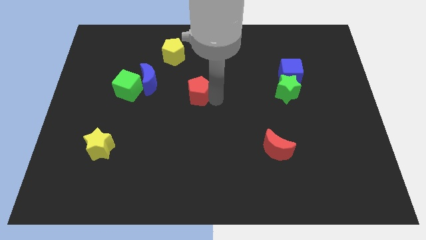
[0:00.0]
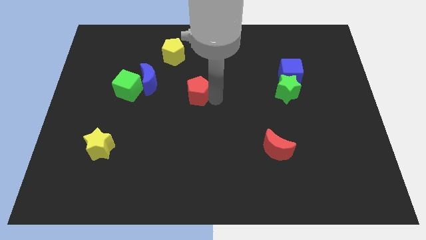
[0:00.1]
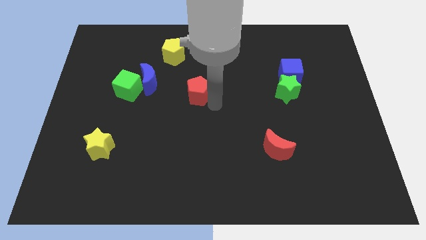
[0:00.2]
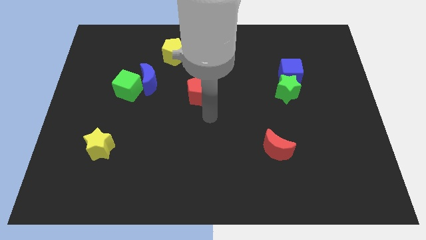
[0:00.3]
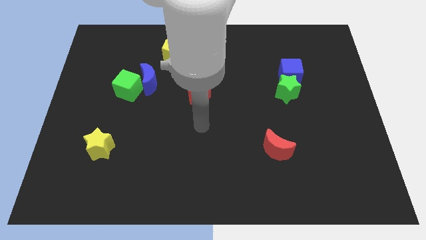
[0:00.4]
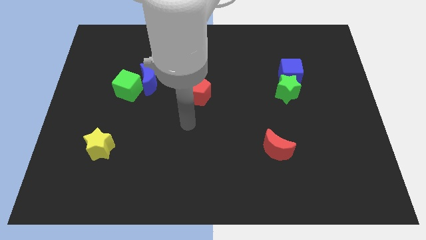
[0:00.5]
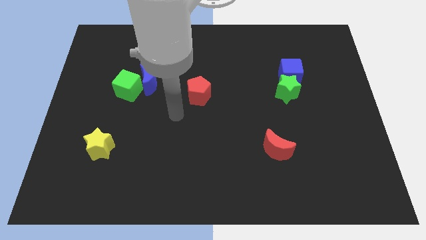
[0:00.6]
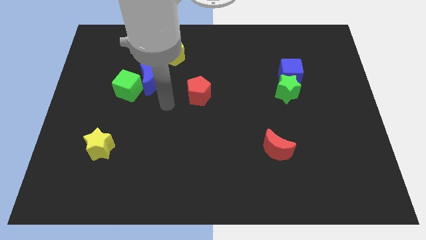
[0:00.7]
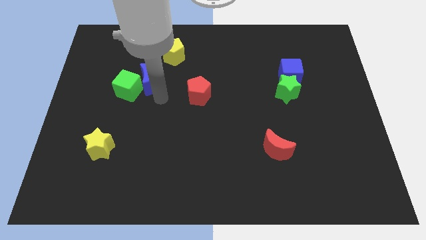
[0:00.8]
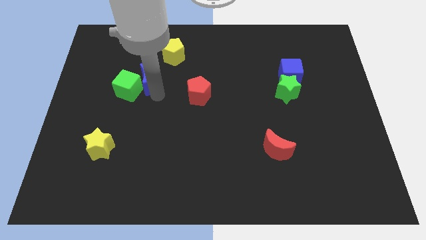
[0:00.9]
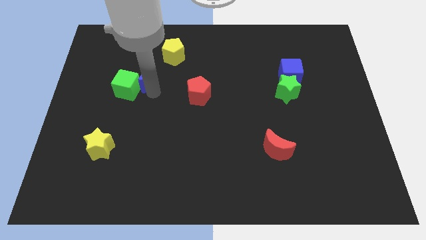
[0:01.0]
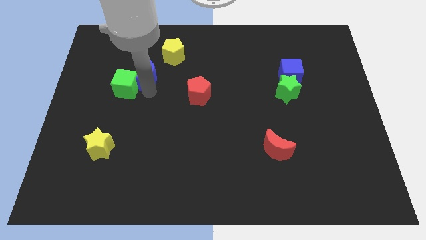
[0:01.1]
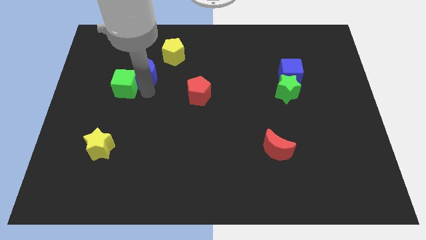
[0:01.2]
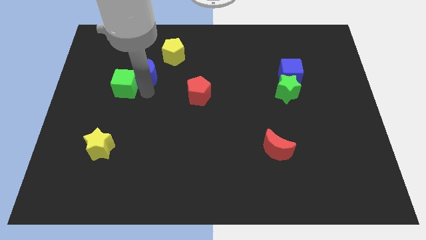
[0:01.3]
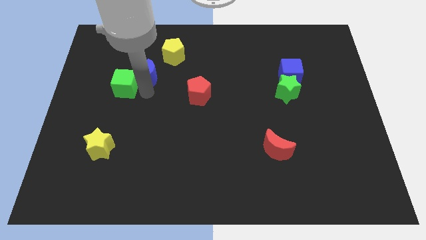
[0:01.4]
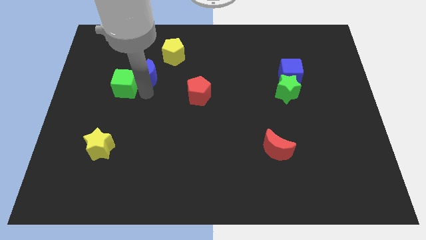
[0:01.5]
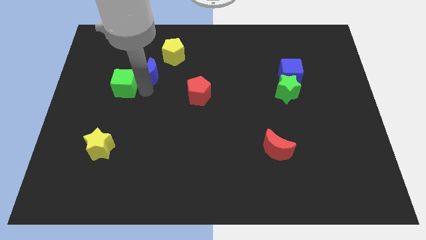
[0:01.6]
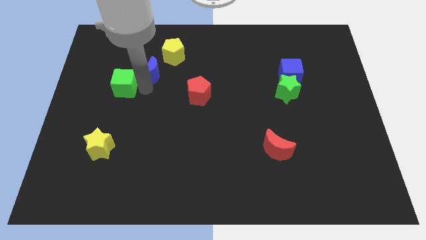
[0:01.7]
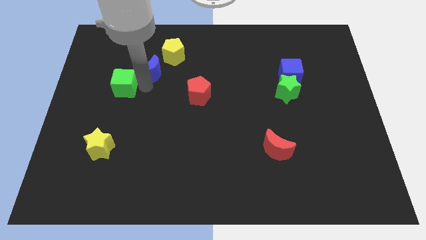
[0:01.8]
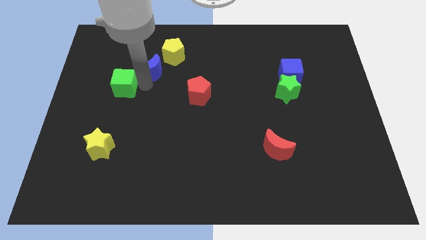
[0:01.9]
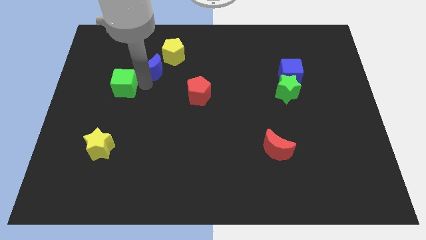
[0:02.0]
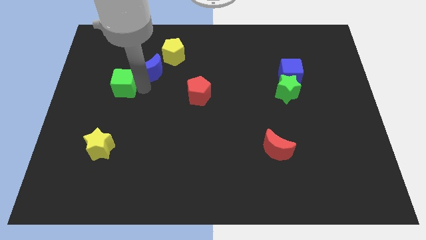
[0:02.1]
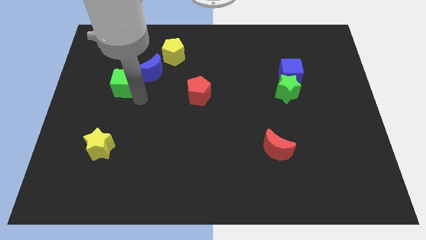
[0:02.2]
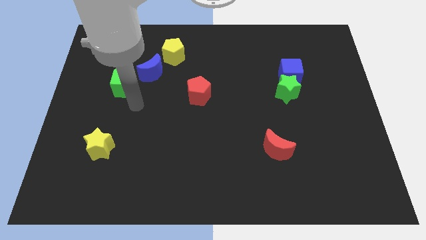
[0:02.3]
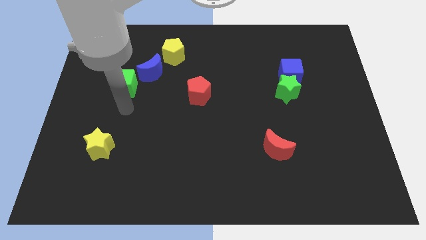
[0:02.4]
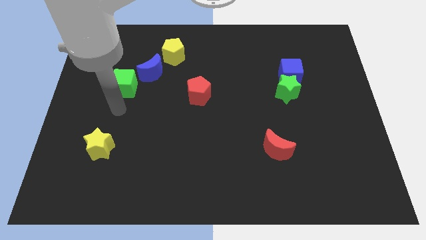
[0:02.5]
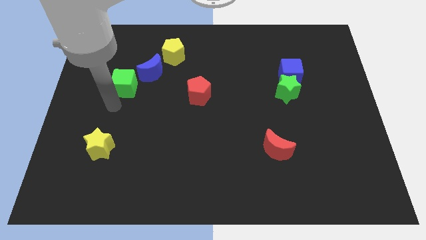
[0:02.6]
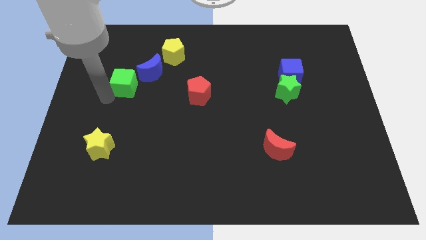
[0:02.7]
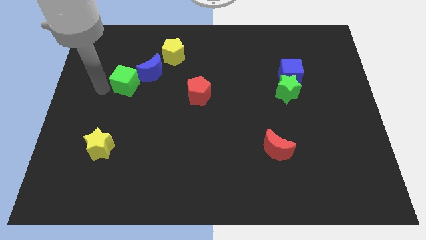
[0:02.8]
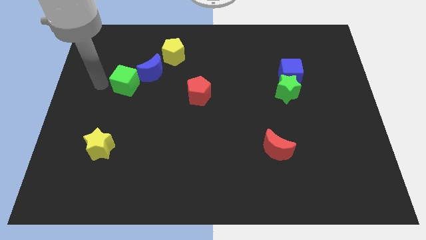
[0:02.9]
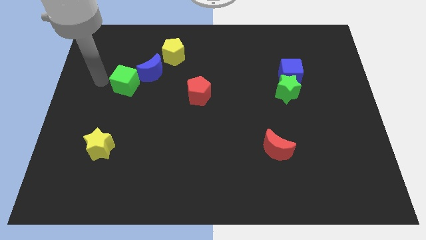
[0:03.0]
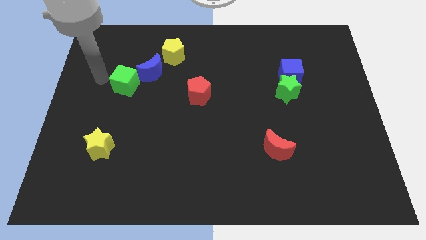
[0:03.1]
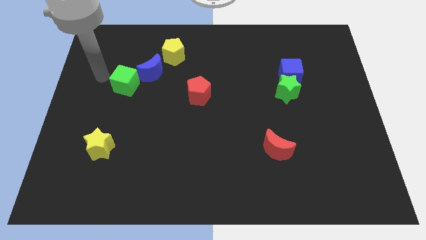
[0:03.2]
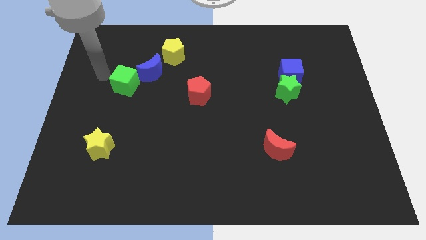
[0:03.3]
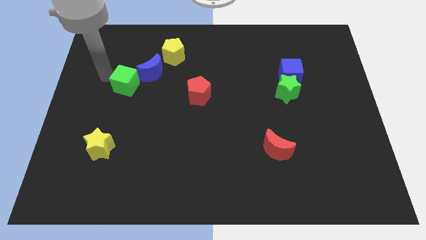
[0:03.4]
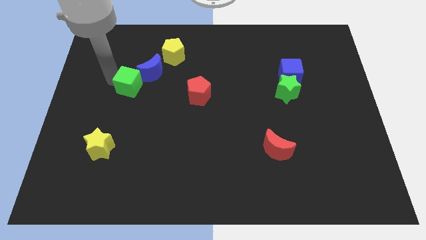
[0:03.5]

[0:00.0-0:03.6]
slide the blue moon and green cube diagonally on the bottom left side of the yellow pentagon

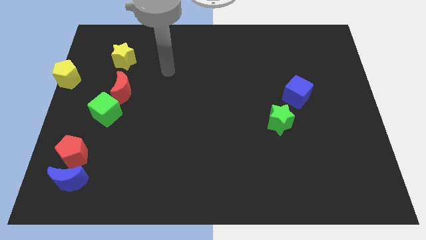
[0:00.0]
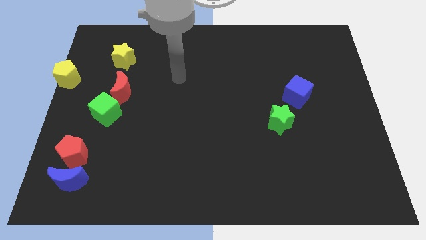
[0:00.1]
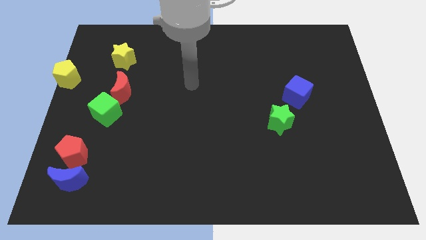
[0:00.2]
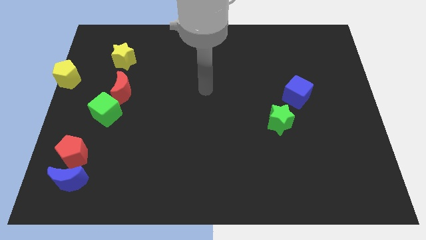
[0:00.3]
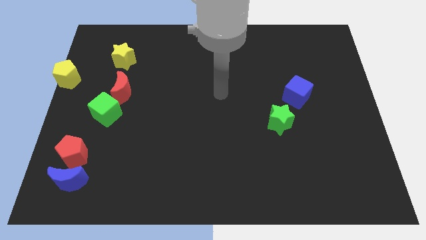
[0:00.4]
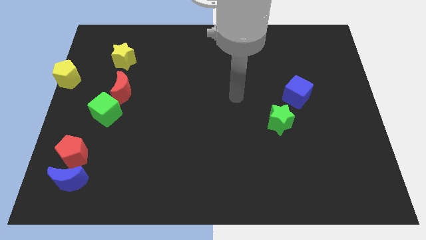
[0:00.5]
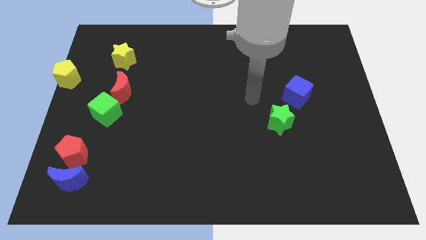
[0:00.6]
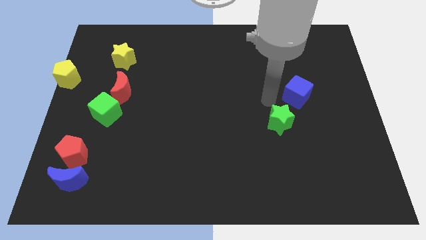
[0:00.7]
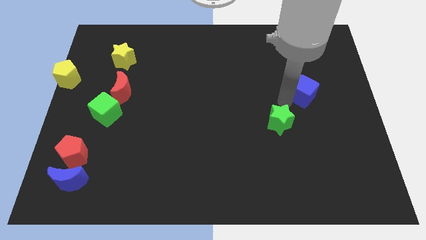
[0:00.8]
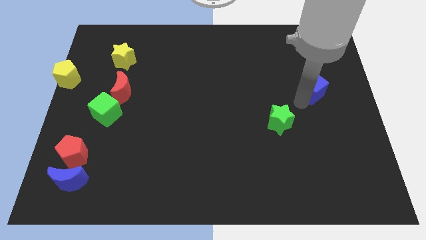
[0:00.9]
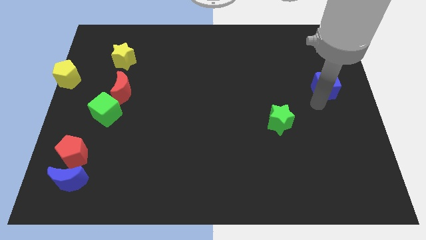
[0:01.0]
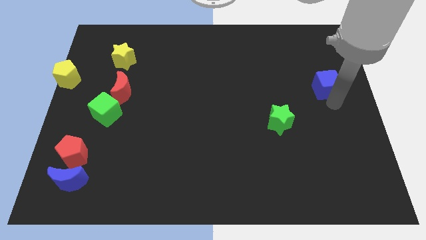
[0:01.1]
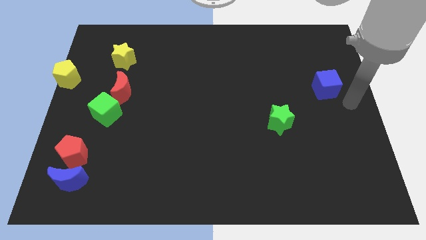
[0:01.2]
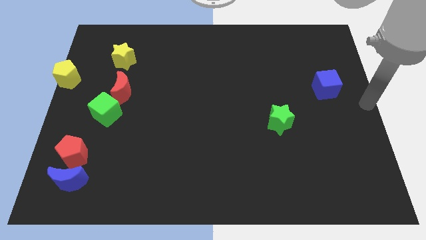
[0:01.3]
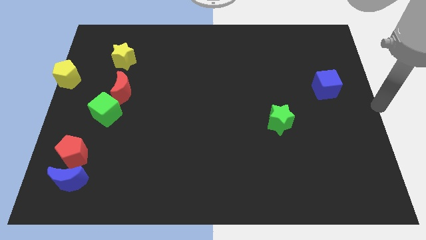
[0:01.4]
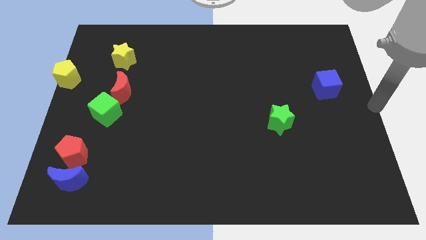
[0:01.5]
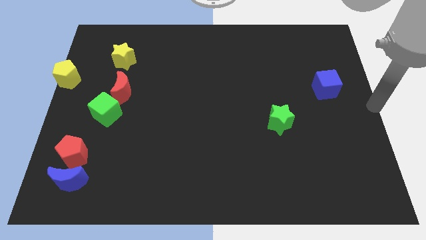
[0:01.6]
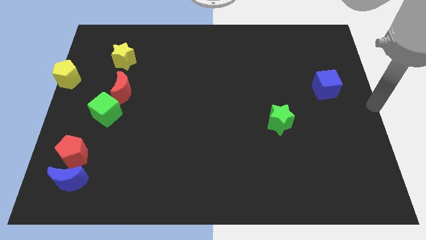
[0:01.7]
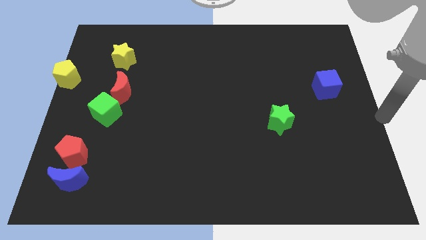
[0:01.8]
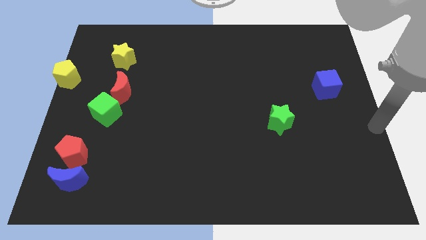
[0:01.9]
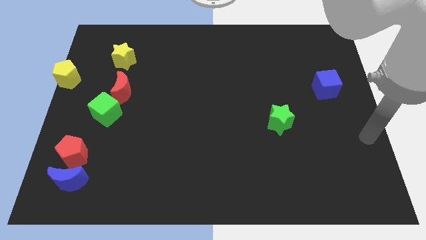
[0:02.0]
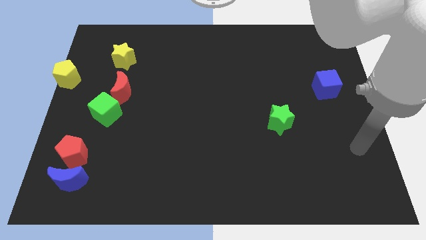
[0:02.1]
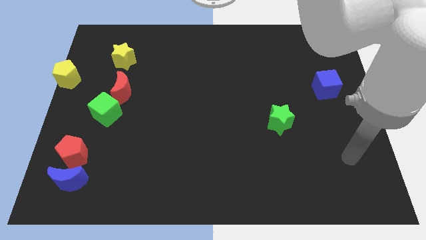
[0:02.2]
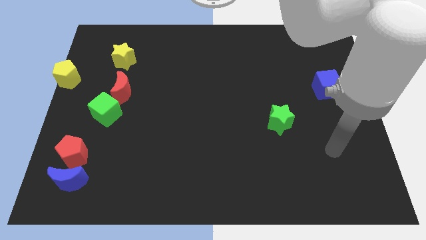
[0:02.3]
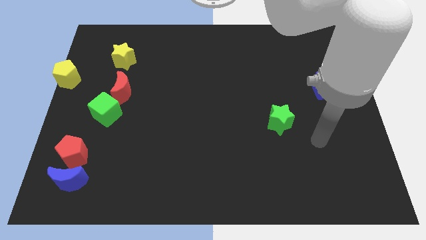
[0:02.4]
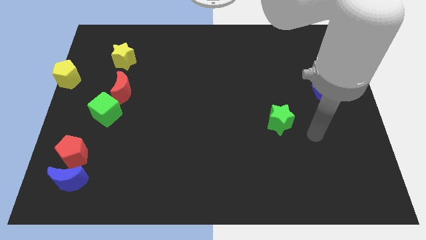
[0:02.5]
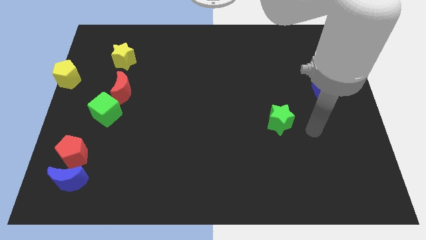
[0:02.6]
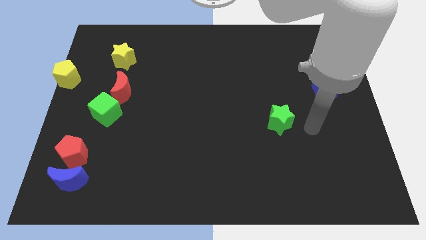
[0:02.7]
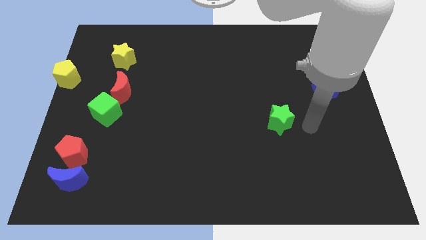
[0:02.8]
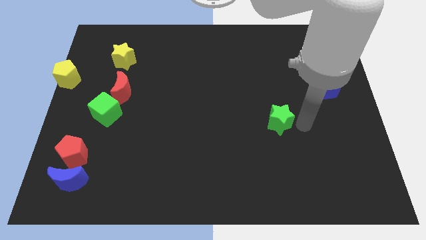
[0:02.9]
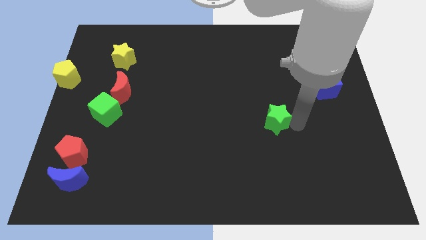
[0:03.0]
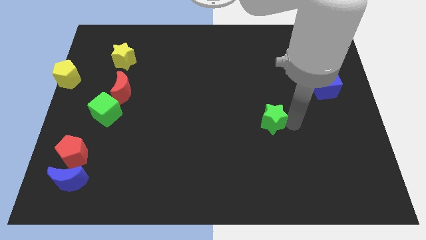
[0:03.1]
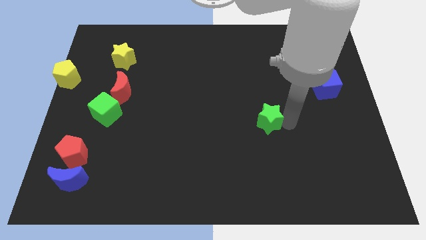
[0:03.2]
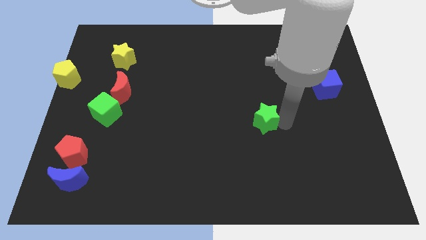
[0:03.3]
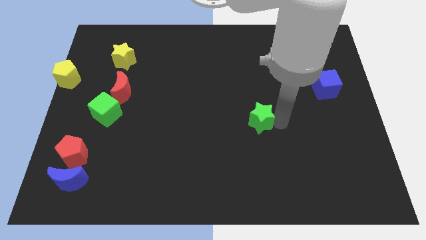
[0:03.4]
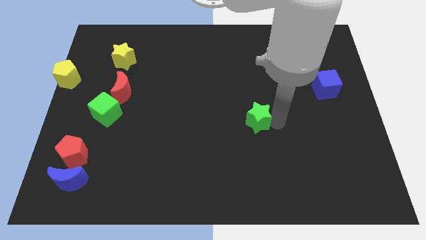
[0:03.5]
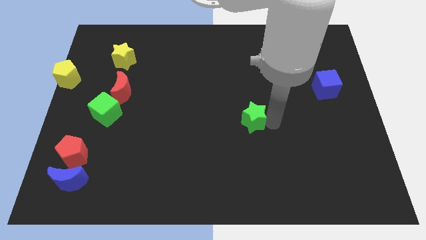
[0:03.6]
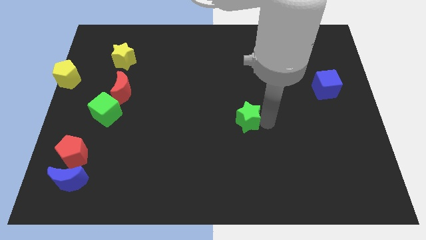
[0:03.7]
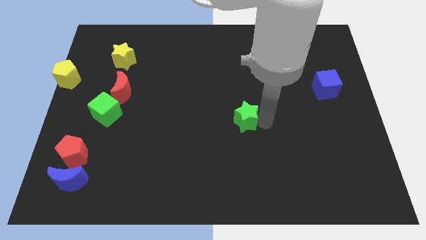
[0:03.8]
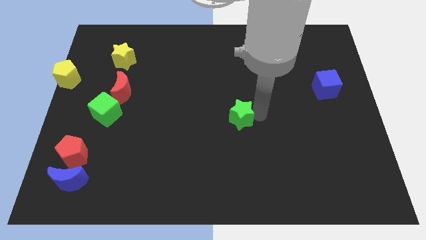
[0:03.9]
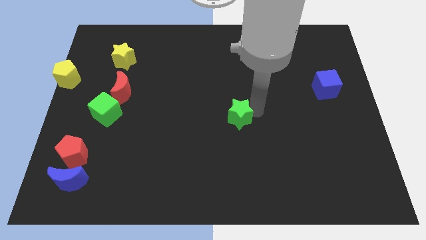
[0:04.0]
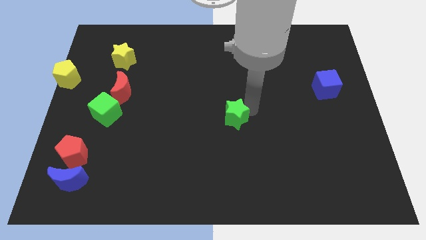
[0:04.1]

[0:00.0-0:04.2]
separate the green star from the blue cube

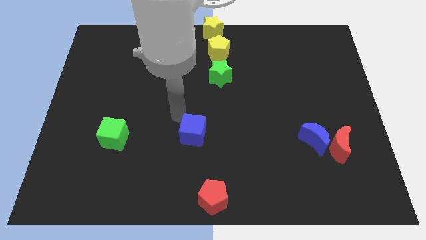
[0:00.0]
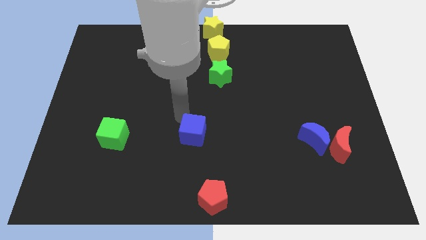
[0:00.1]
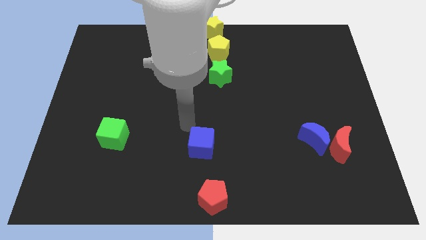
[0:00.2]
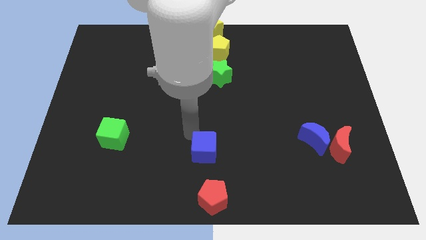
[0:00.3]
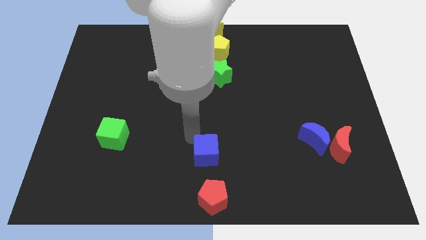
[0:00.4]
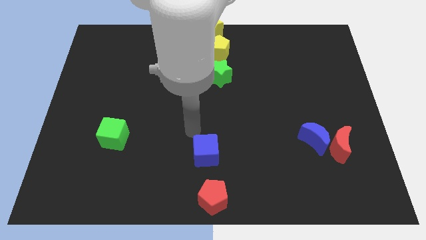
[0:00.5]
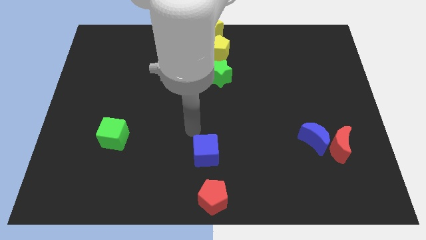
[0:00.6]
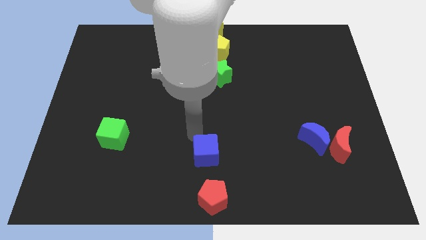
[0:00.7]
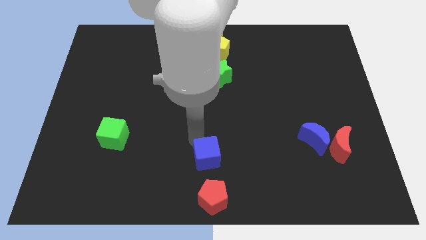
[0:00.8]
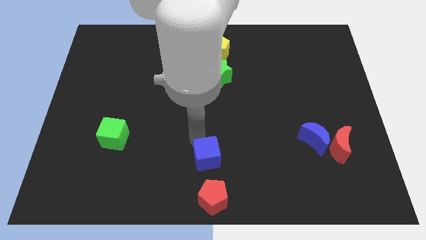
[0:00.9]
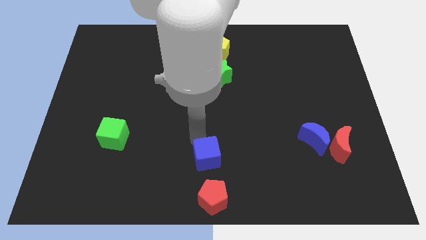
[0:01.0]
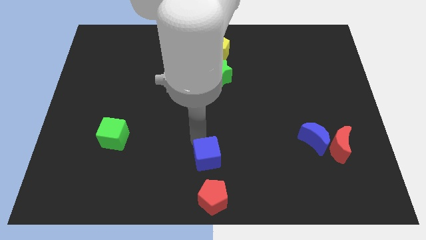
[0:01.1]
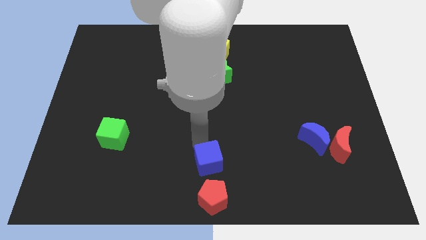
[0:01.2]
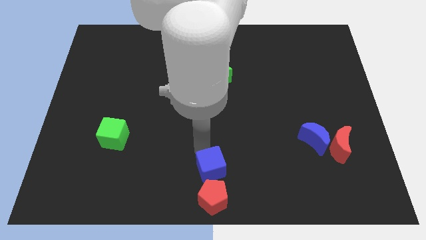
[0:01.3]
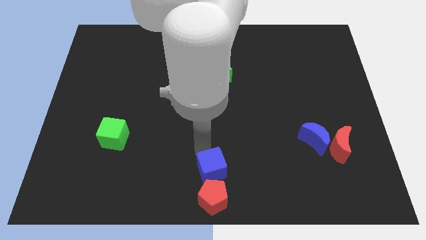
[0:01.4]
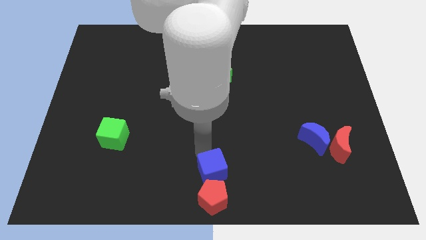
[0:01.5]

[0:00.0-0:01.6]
place the blue cube above red pentagon
